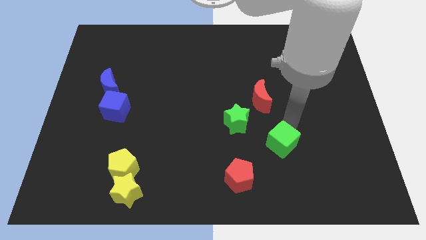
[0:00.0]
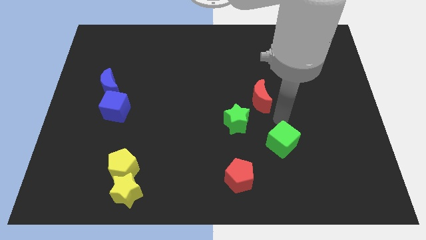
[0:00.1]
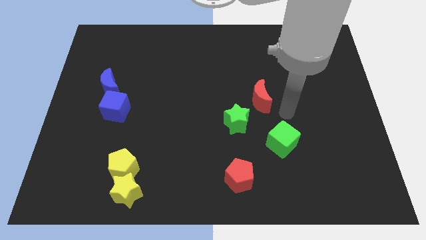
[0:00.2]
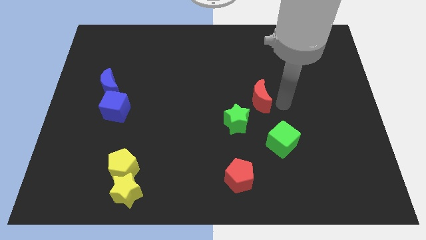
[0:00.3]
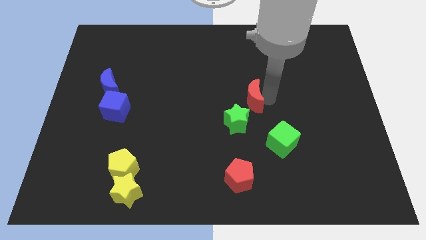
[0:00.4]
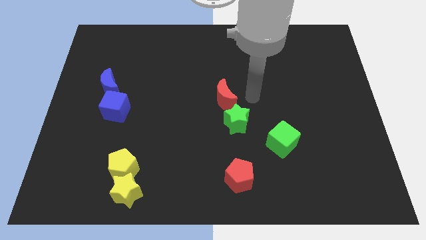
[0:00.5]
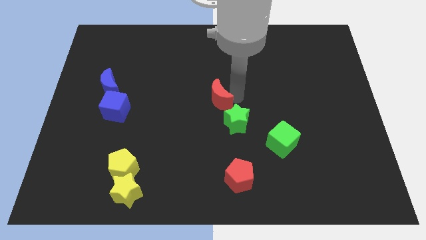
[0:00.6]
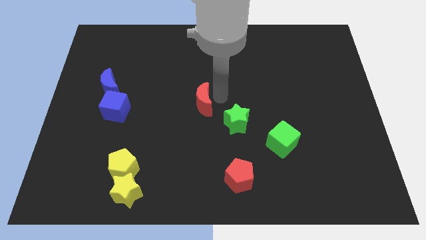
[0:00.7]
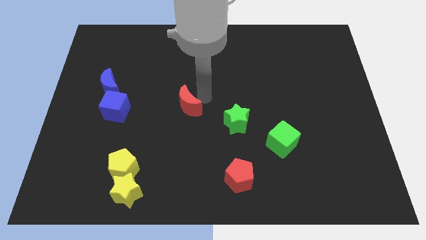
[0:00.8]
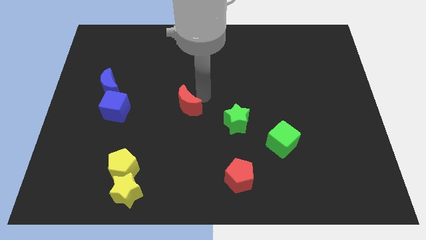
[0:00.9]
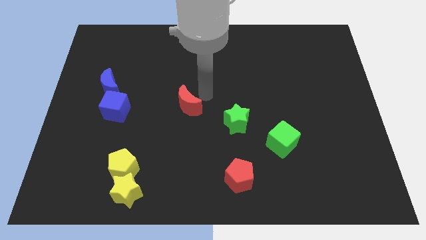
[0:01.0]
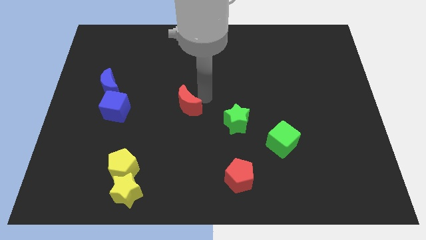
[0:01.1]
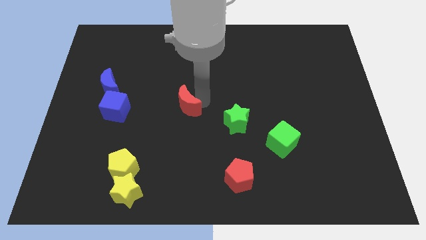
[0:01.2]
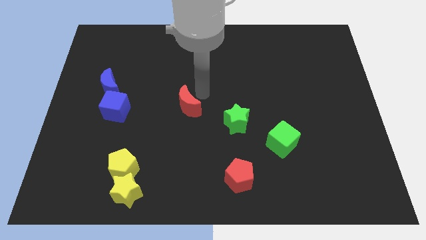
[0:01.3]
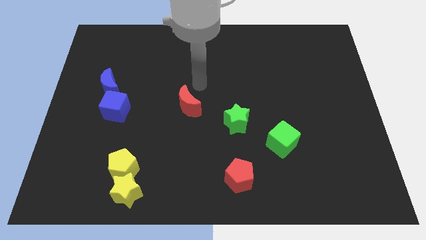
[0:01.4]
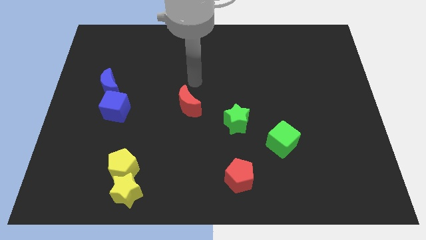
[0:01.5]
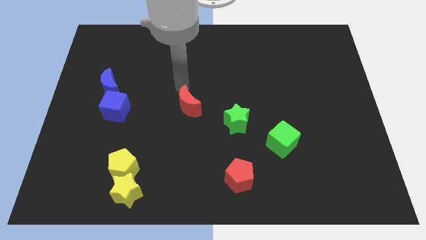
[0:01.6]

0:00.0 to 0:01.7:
move the red crescent to the center of the board

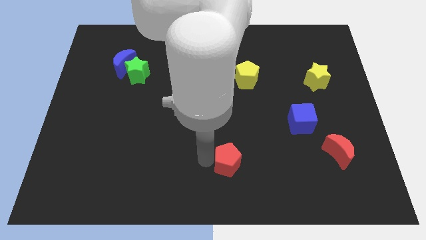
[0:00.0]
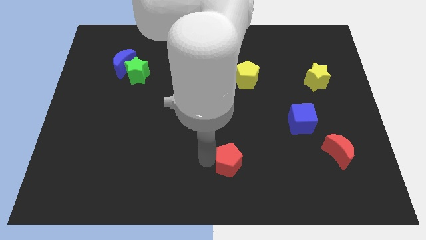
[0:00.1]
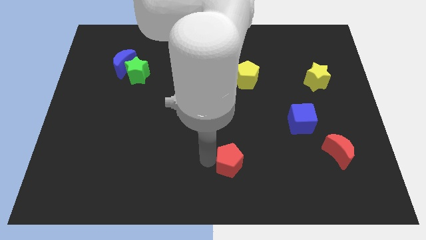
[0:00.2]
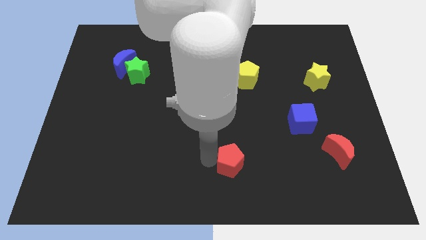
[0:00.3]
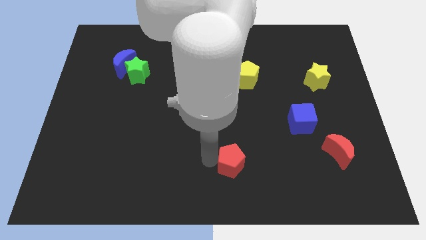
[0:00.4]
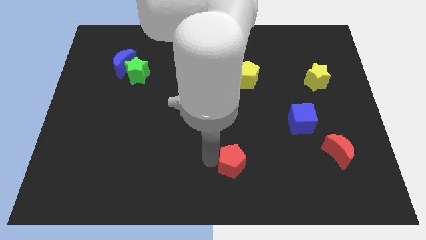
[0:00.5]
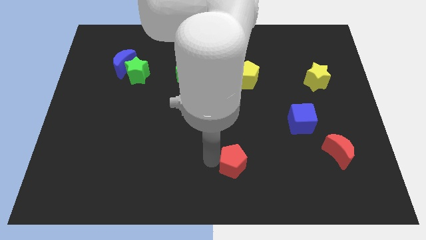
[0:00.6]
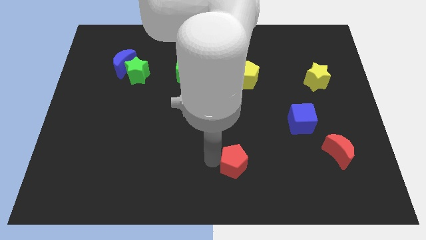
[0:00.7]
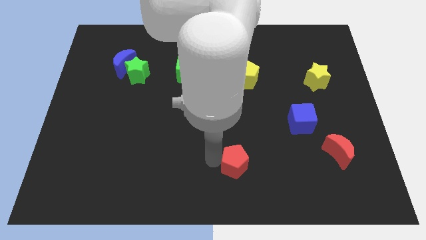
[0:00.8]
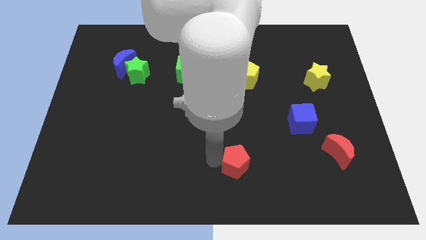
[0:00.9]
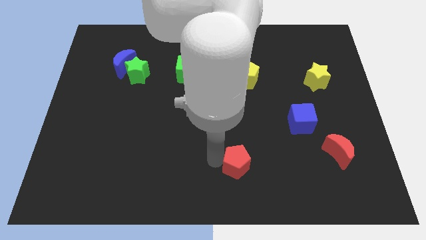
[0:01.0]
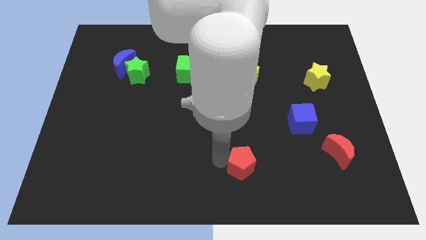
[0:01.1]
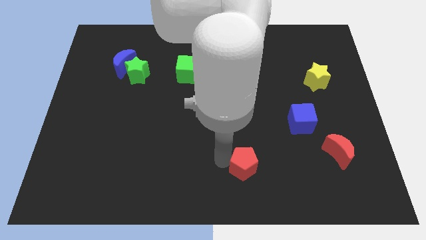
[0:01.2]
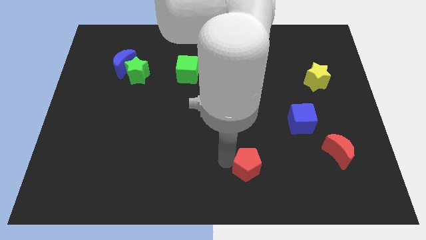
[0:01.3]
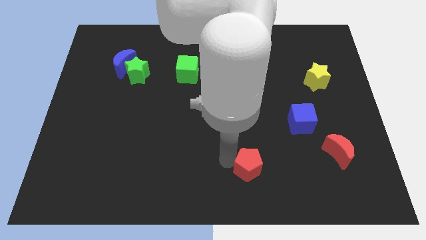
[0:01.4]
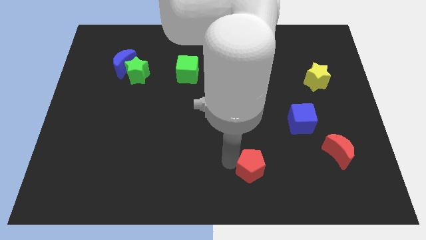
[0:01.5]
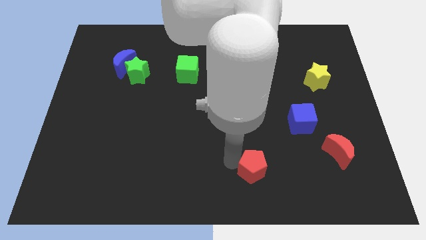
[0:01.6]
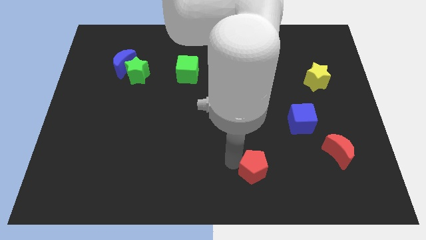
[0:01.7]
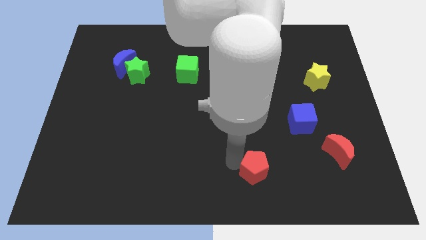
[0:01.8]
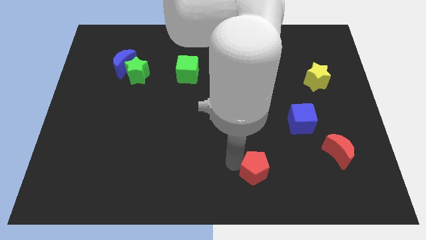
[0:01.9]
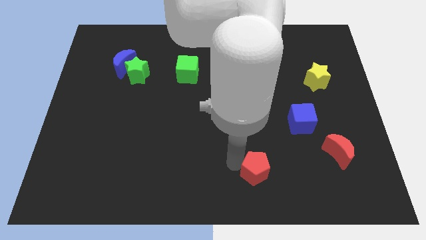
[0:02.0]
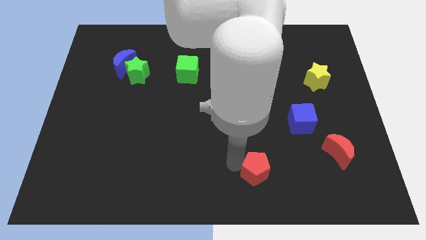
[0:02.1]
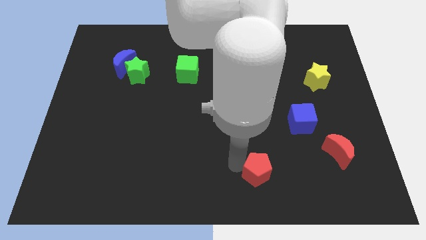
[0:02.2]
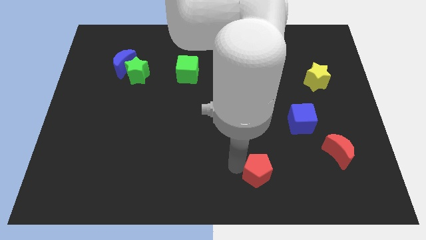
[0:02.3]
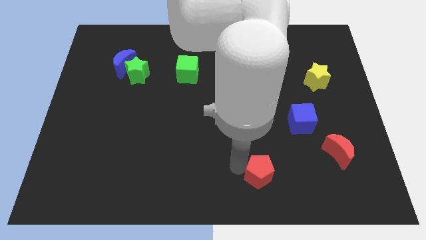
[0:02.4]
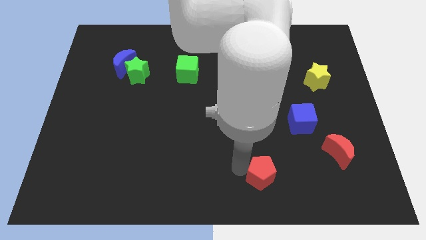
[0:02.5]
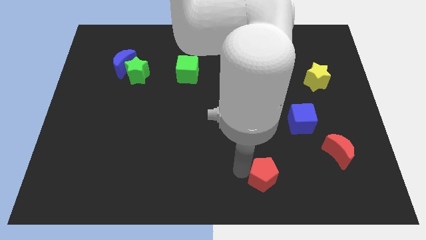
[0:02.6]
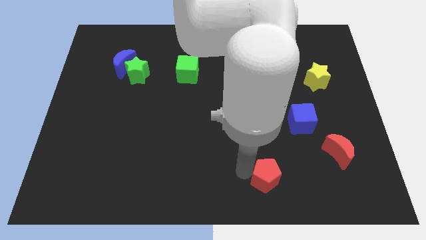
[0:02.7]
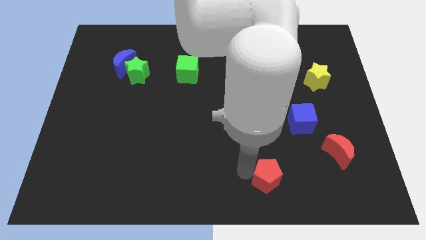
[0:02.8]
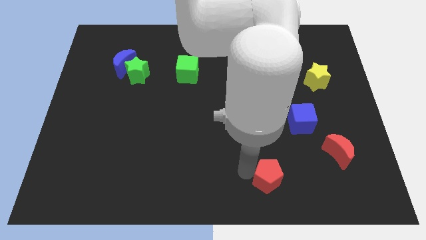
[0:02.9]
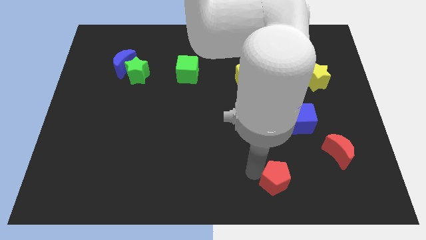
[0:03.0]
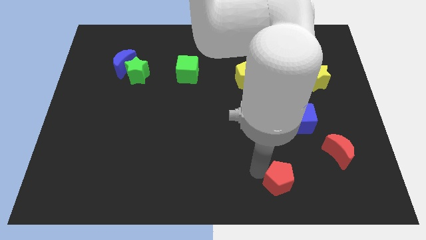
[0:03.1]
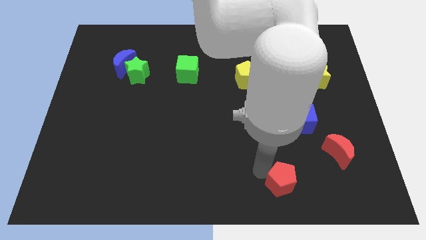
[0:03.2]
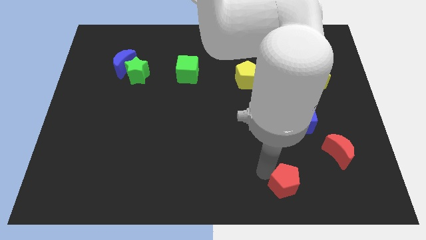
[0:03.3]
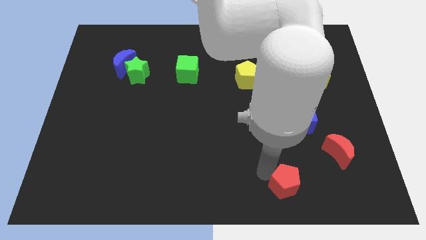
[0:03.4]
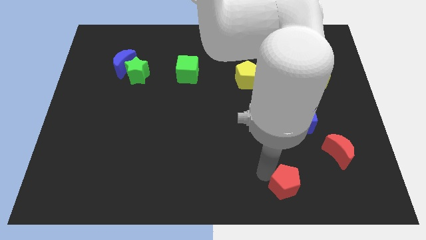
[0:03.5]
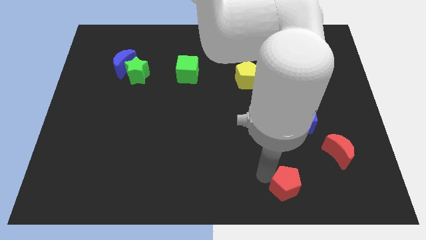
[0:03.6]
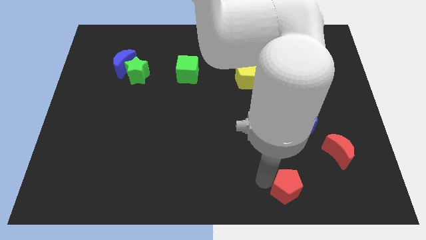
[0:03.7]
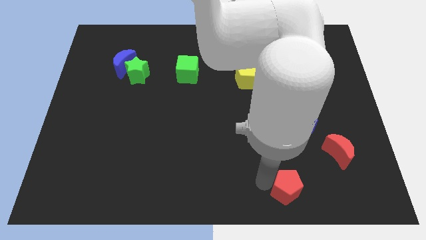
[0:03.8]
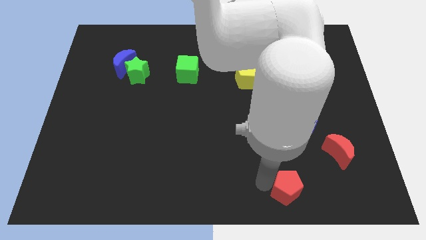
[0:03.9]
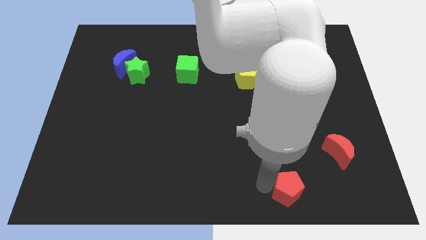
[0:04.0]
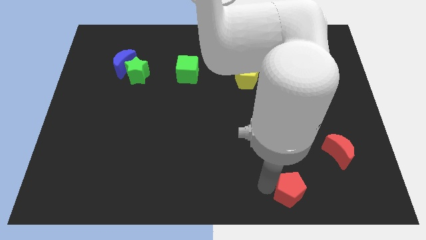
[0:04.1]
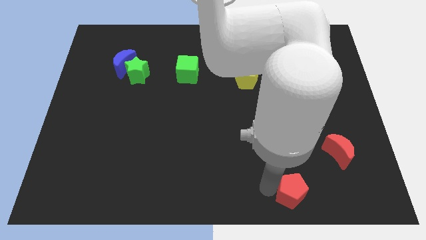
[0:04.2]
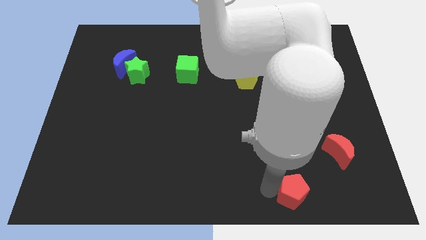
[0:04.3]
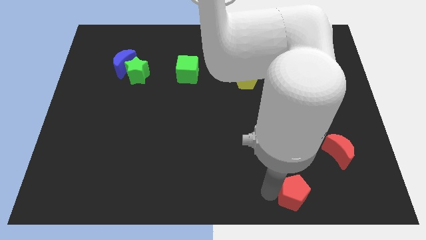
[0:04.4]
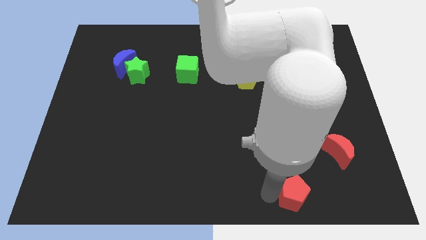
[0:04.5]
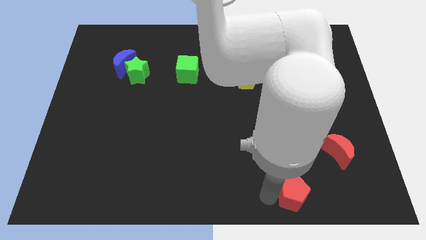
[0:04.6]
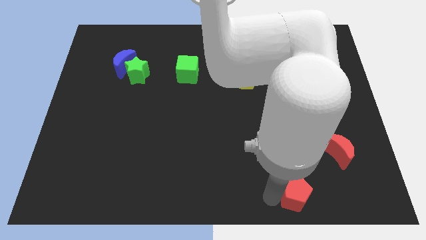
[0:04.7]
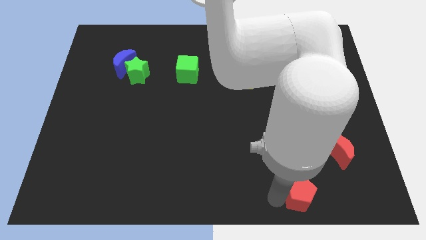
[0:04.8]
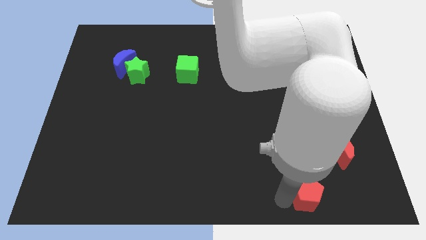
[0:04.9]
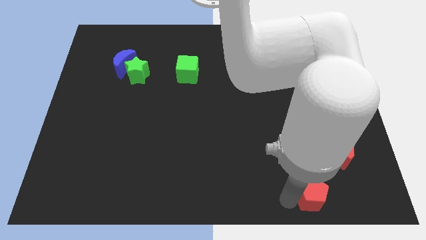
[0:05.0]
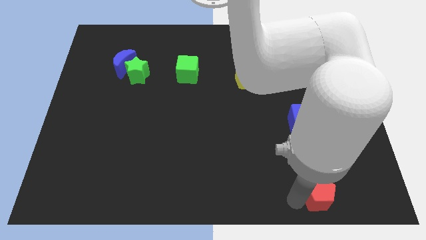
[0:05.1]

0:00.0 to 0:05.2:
push the red pentagon towards the bottom right

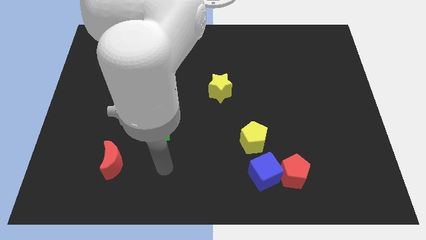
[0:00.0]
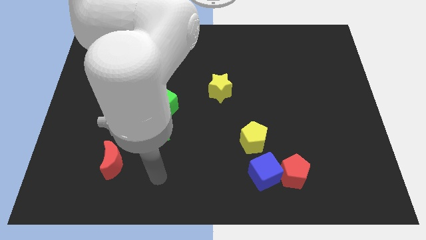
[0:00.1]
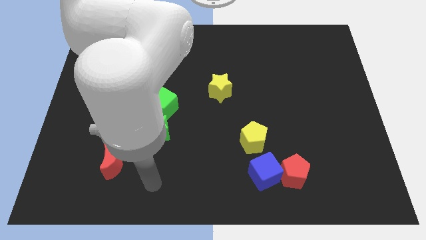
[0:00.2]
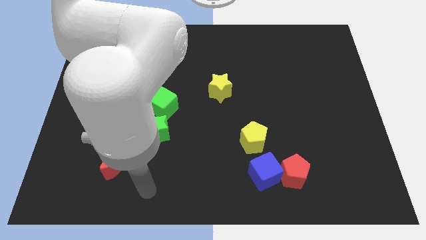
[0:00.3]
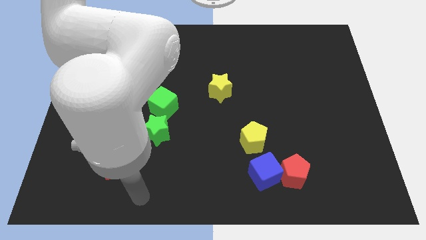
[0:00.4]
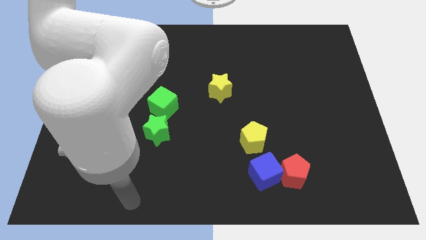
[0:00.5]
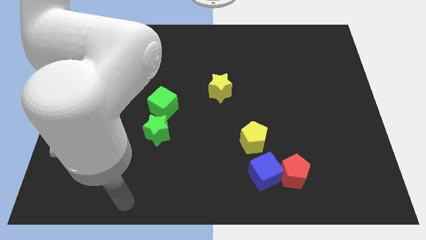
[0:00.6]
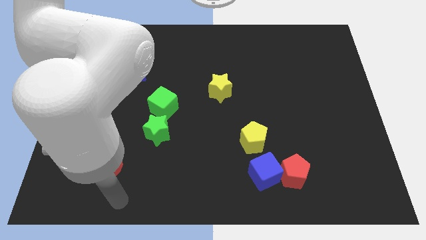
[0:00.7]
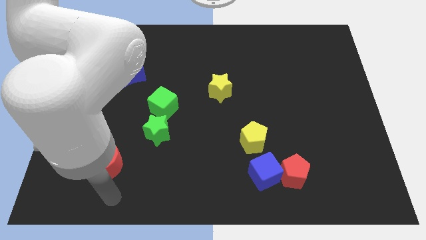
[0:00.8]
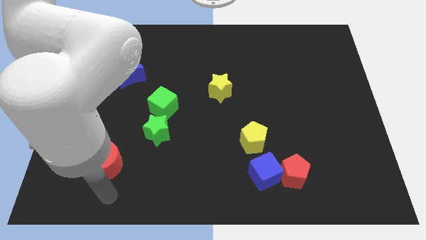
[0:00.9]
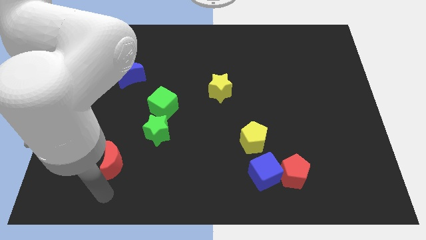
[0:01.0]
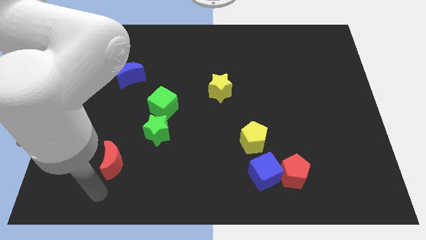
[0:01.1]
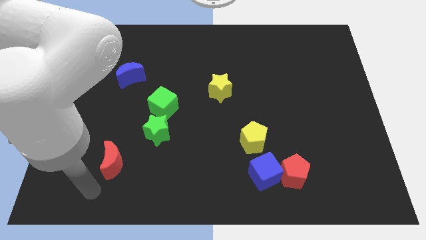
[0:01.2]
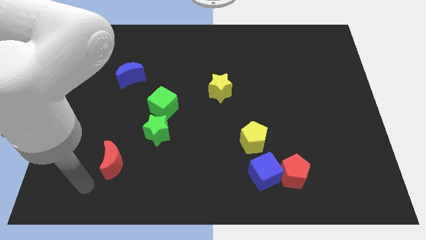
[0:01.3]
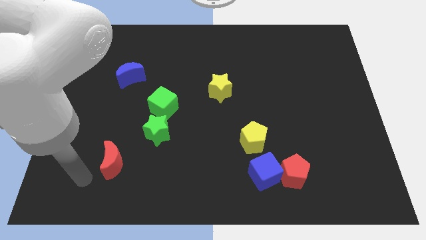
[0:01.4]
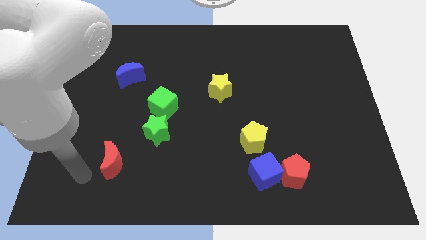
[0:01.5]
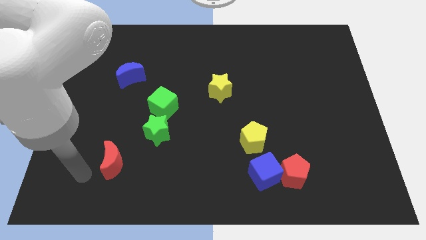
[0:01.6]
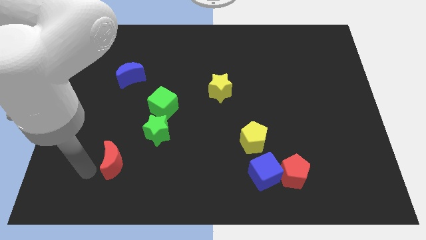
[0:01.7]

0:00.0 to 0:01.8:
point the arm to the left of the red moon

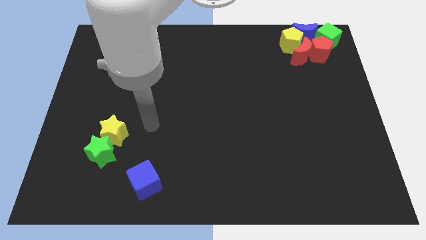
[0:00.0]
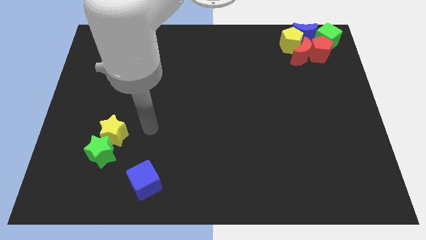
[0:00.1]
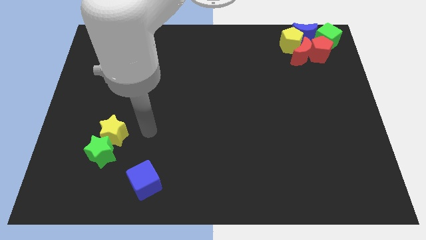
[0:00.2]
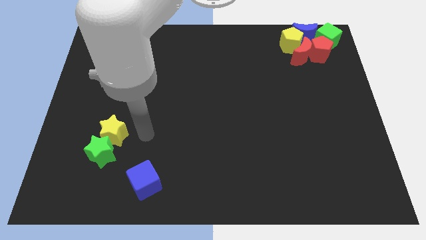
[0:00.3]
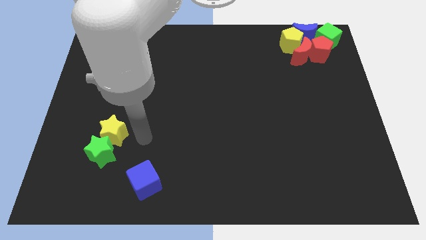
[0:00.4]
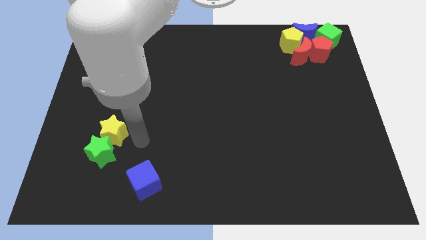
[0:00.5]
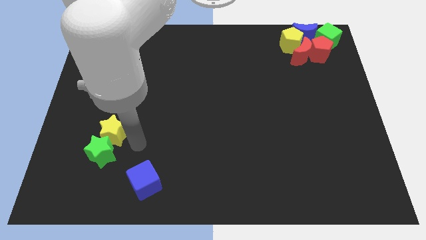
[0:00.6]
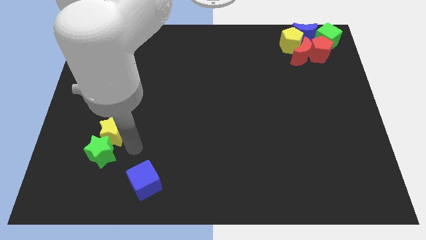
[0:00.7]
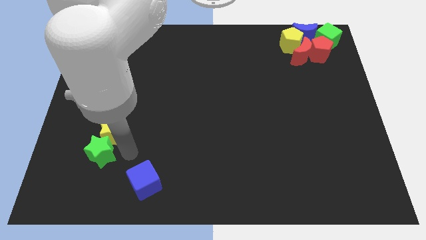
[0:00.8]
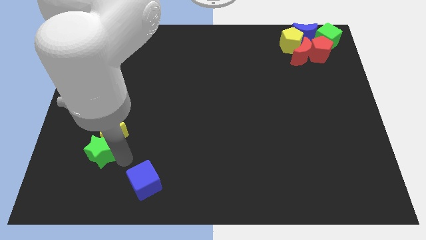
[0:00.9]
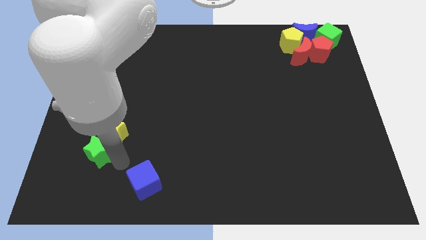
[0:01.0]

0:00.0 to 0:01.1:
point your right to green star
